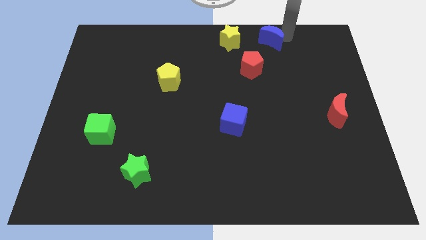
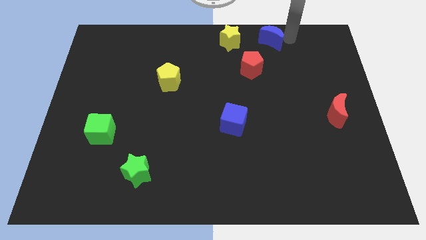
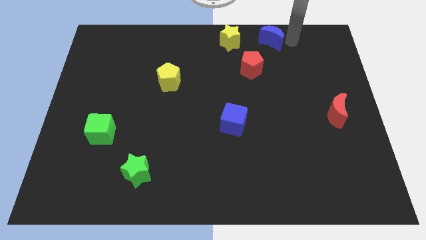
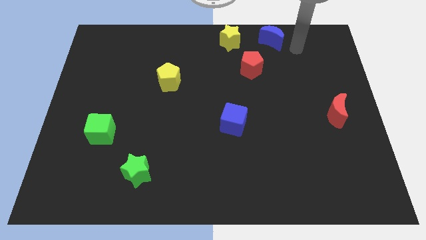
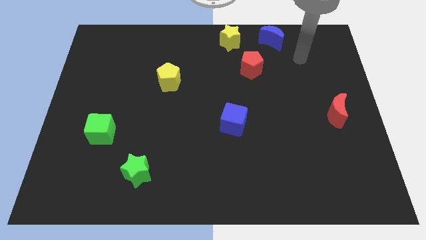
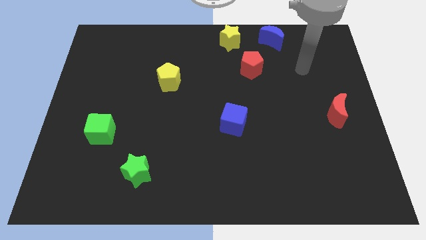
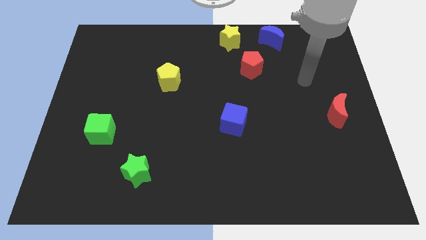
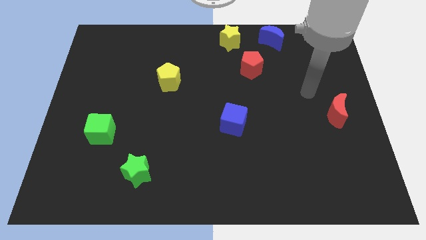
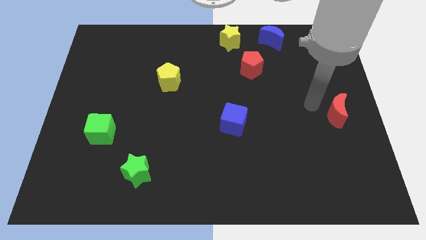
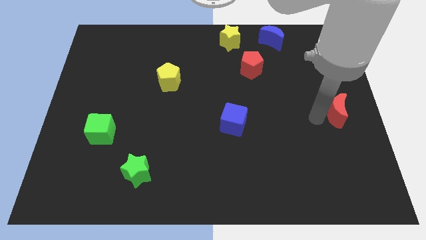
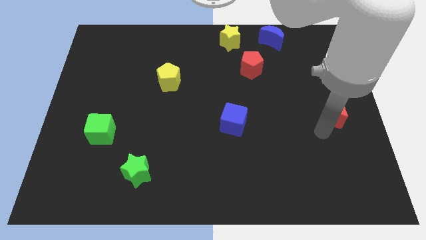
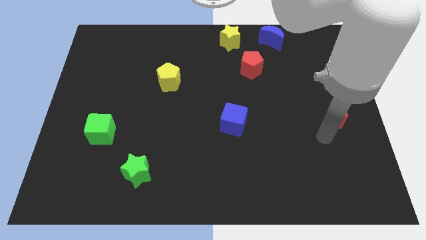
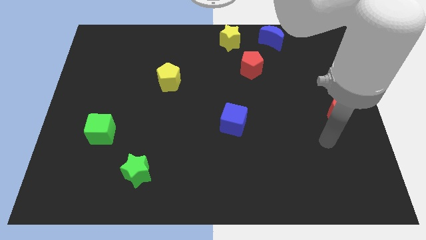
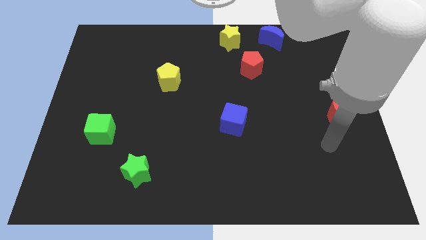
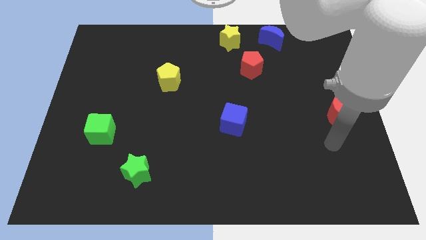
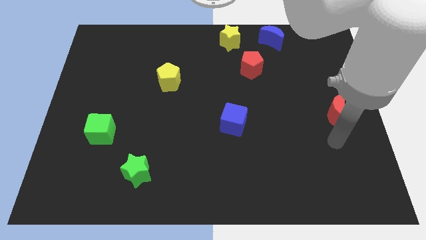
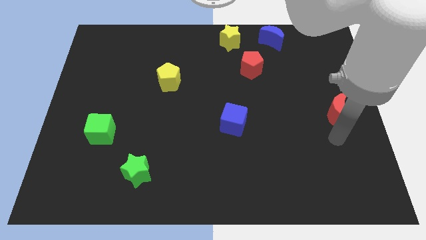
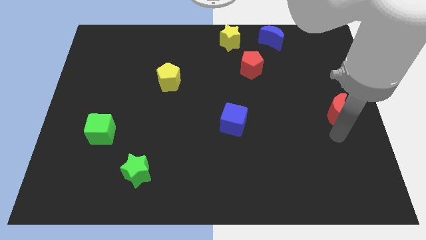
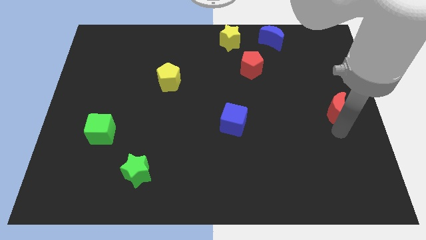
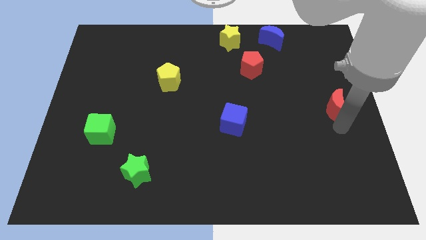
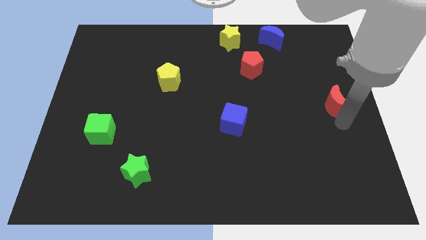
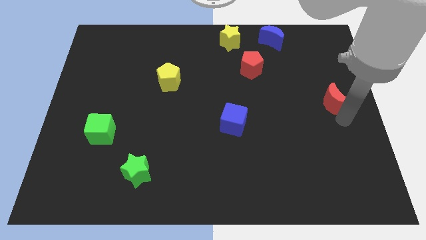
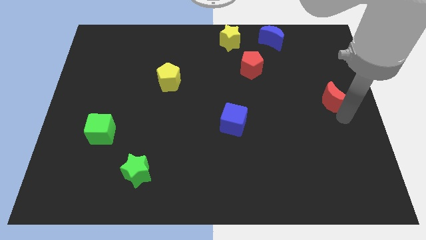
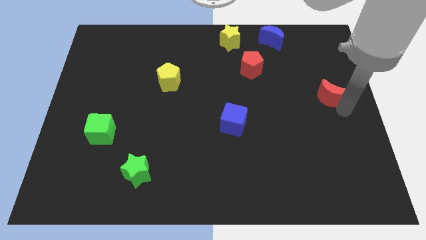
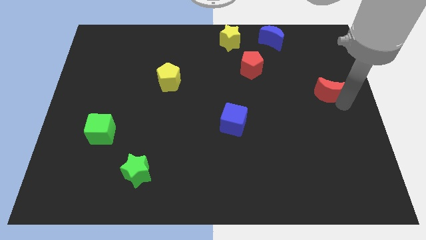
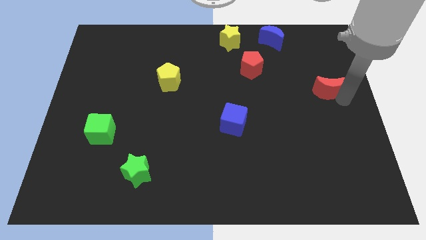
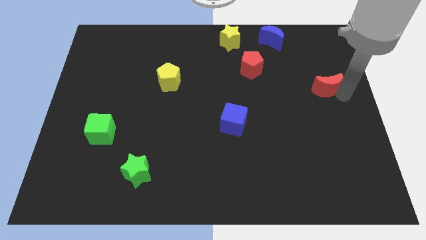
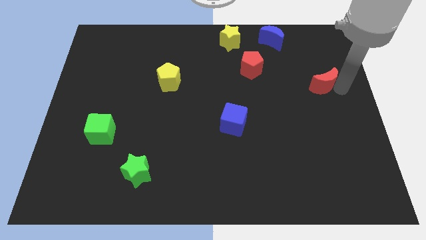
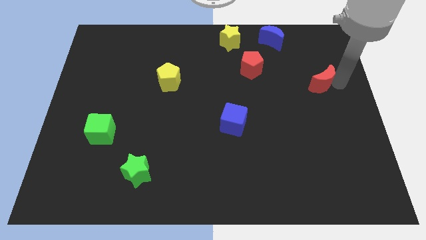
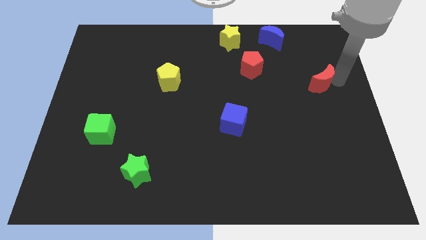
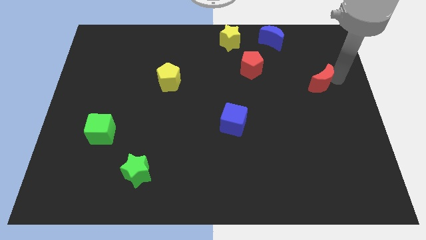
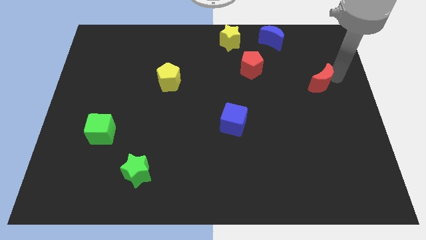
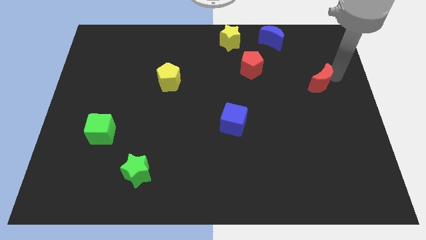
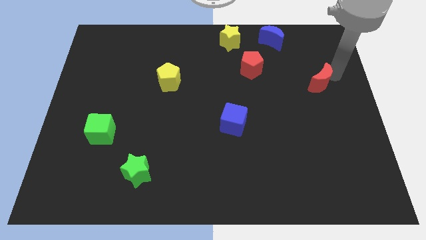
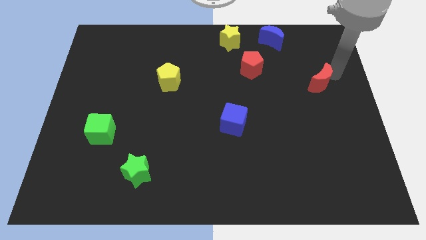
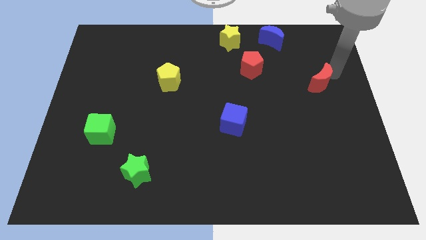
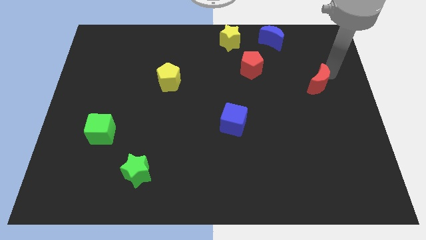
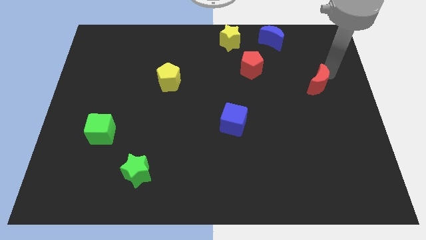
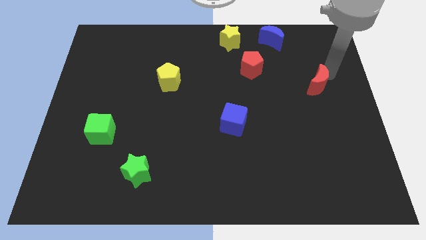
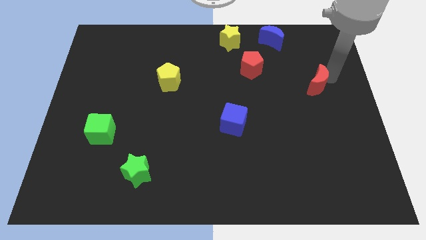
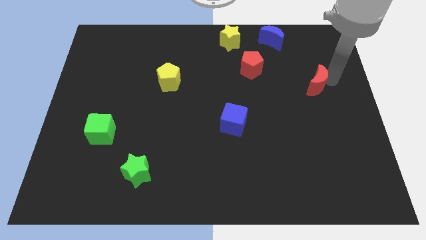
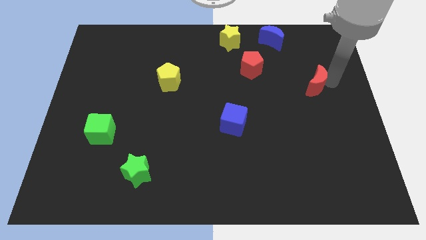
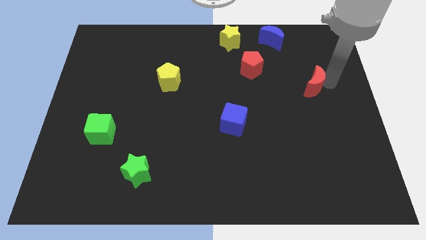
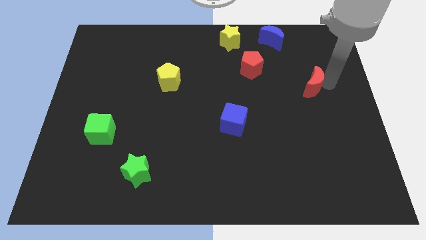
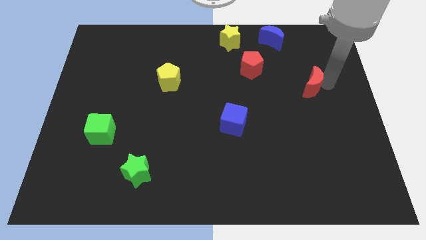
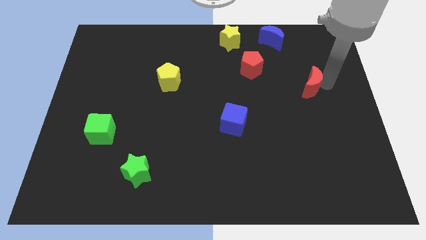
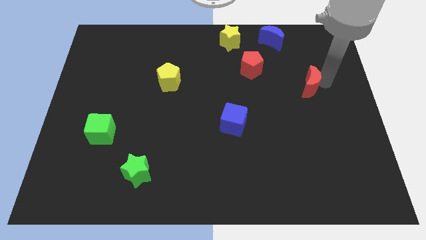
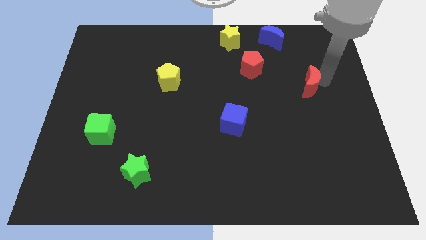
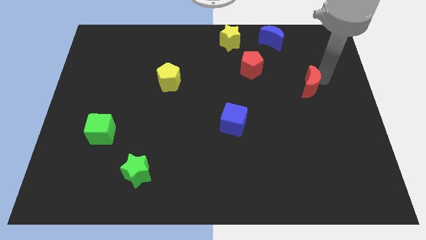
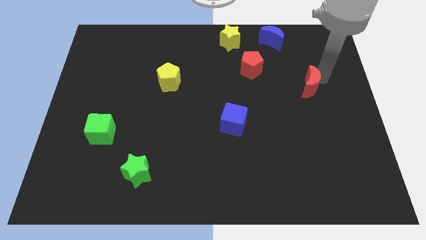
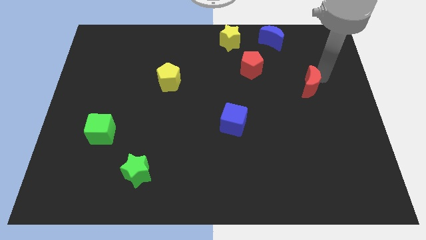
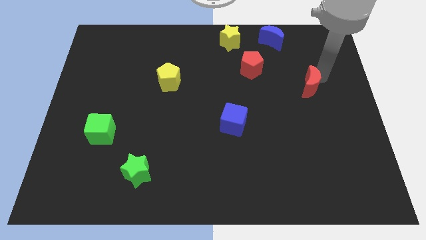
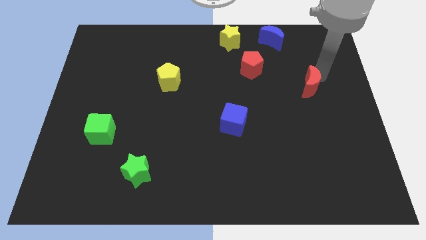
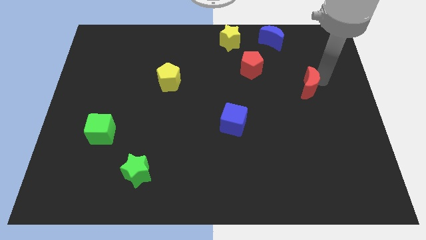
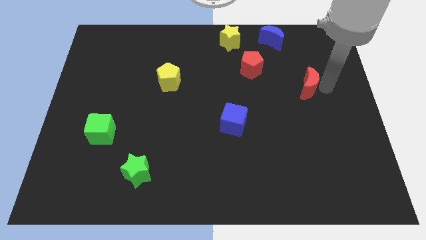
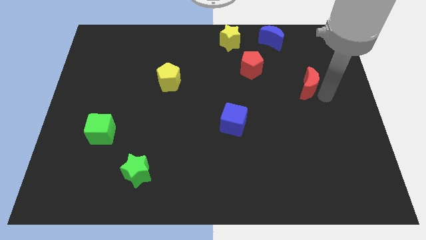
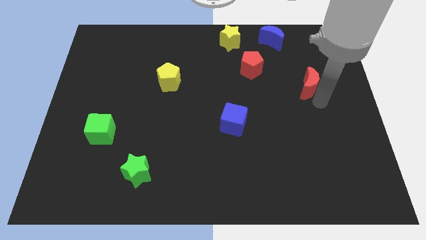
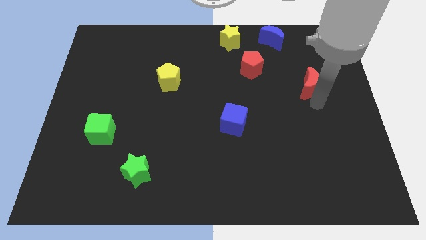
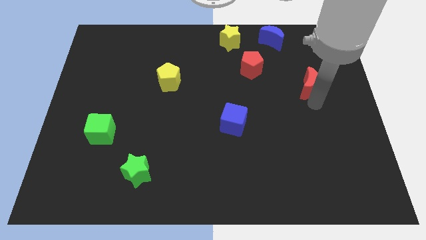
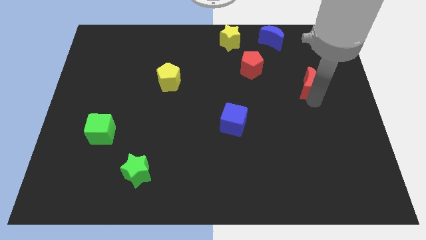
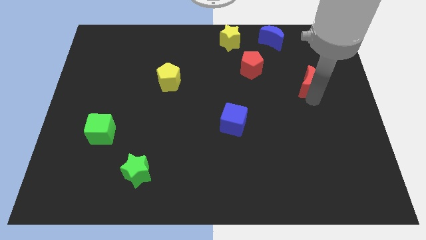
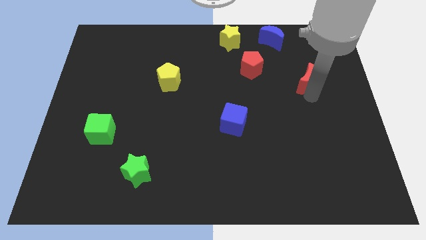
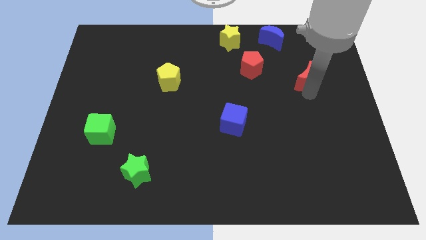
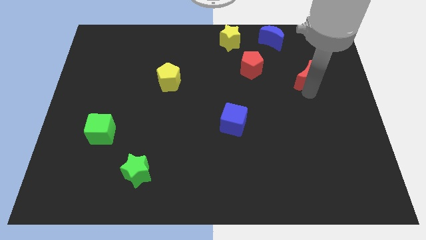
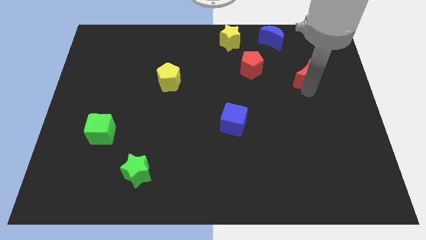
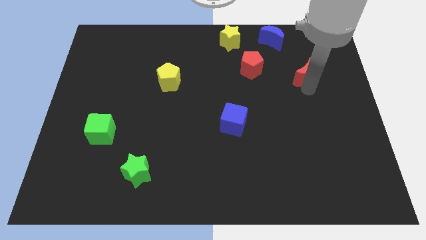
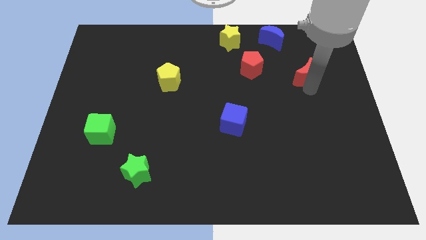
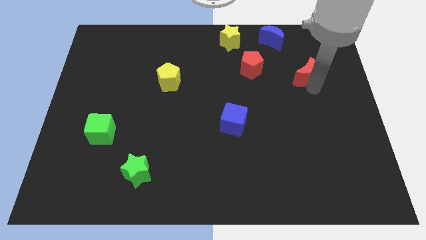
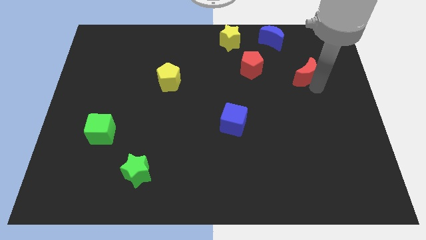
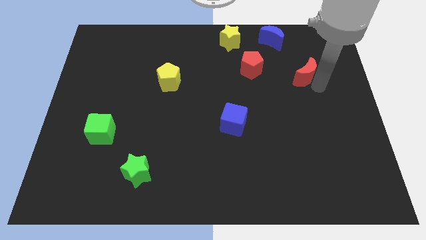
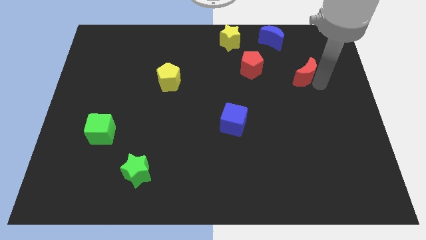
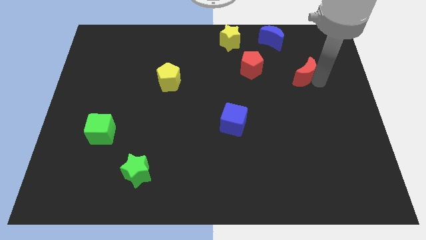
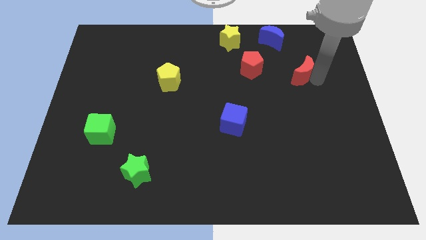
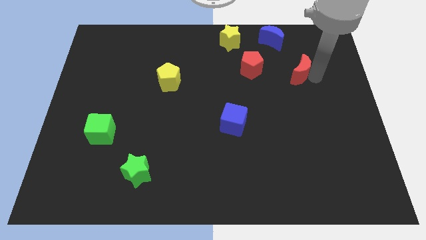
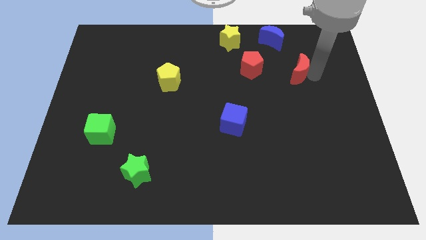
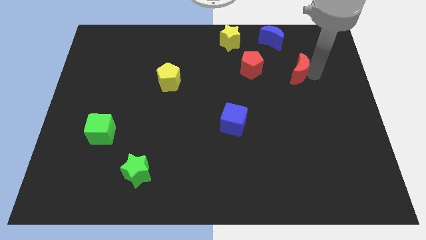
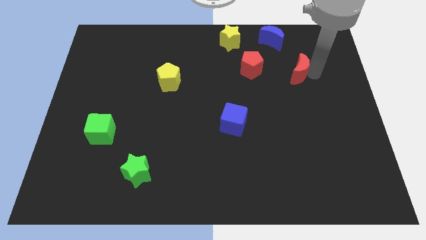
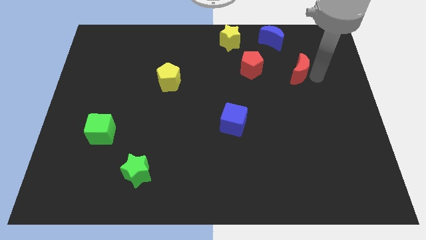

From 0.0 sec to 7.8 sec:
move the red crescent to the right of the red pentagon

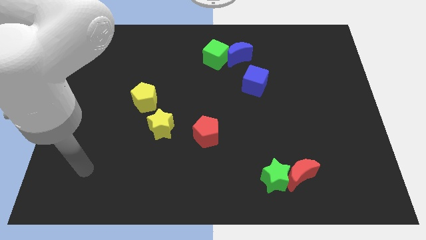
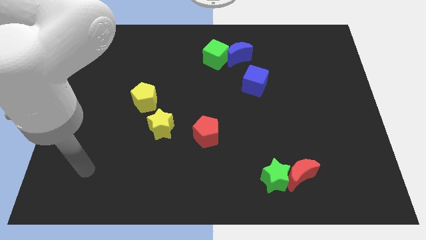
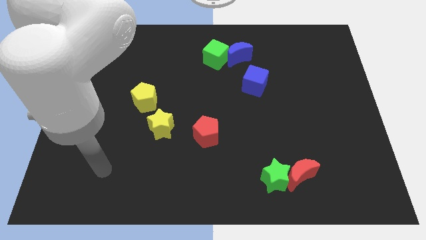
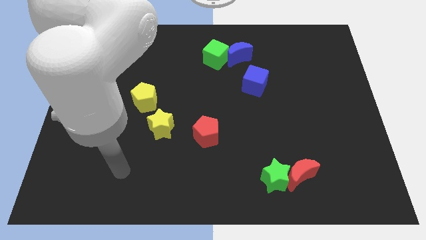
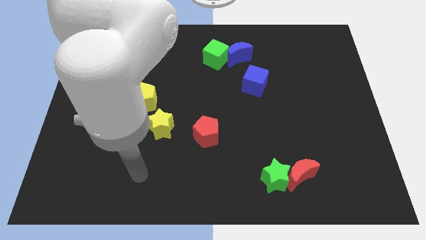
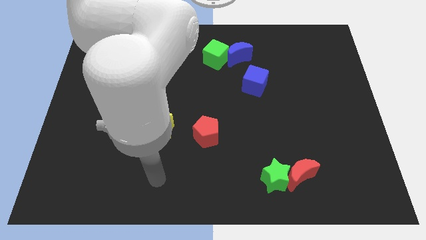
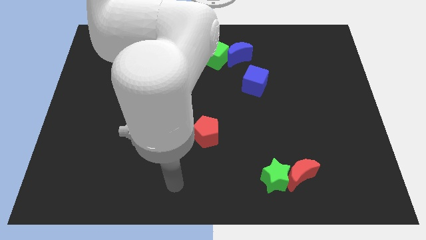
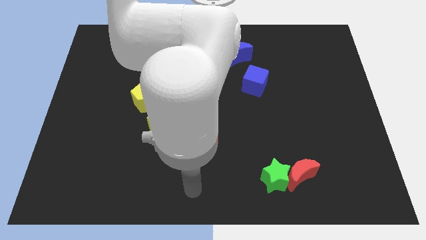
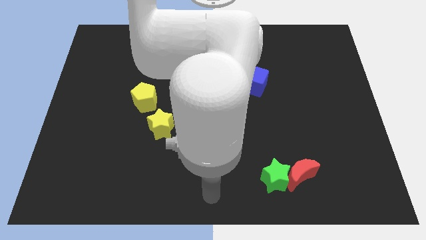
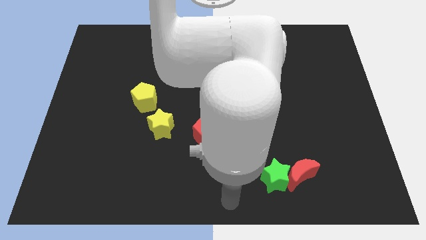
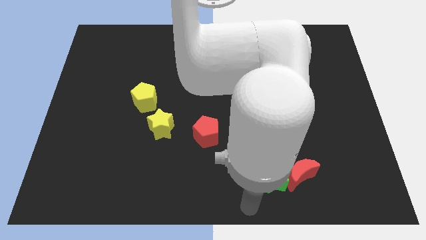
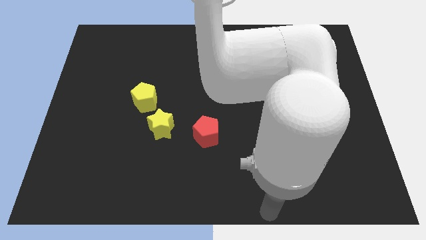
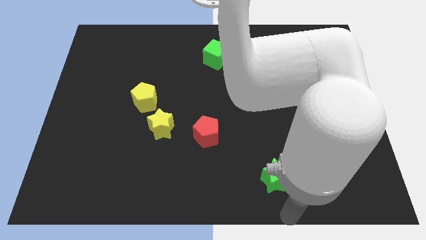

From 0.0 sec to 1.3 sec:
move your arm below to the green star
